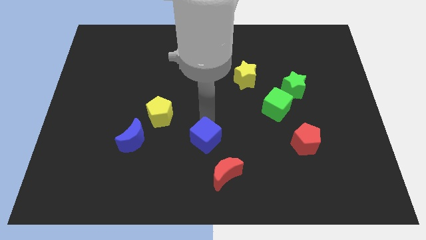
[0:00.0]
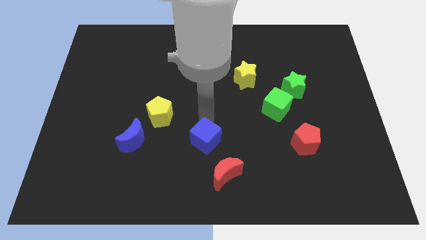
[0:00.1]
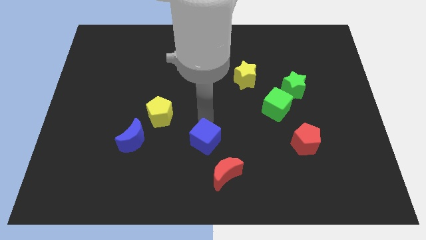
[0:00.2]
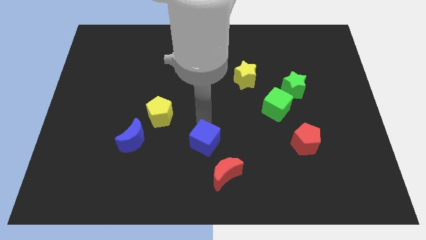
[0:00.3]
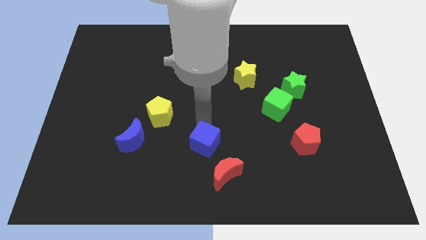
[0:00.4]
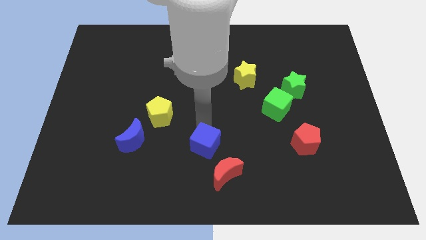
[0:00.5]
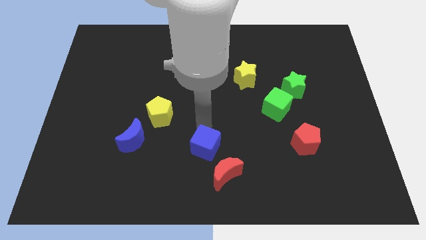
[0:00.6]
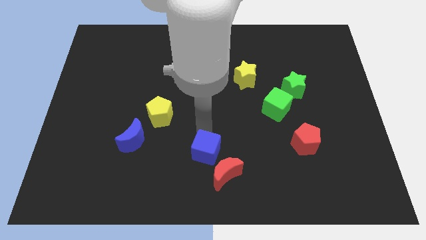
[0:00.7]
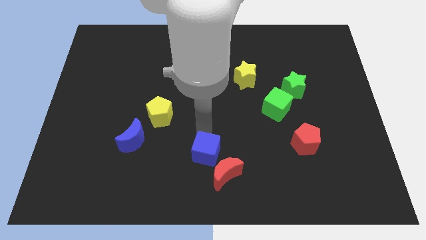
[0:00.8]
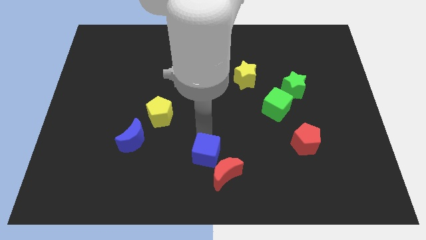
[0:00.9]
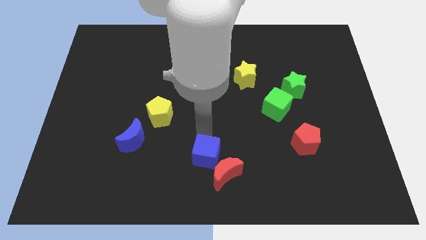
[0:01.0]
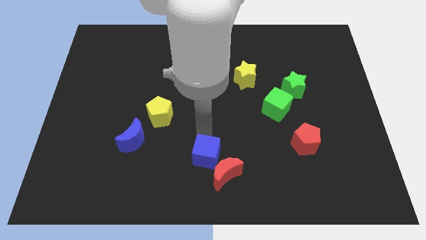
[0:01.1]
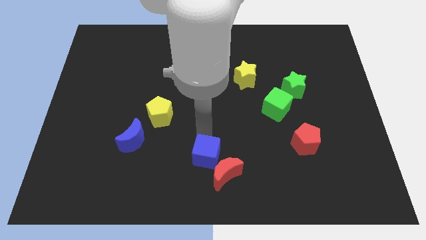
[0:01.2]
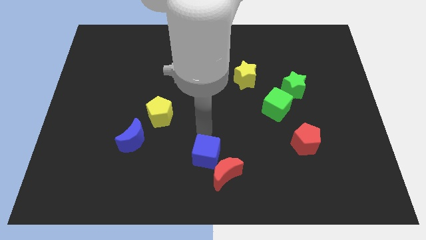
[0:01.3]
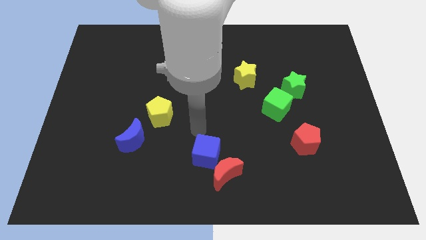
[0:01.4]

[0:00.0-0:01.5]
move blue cube towards red moon

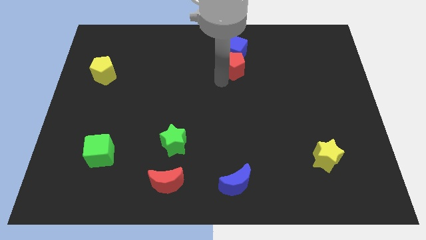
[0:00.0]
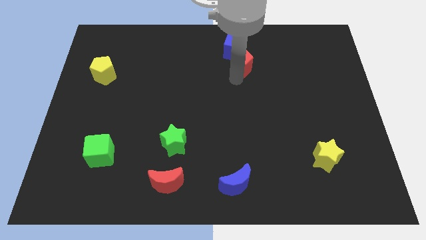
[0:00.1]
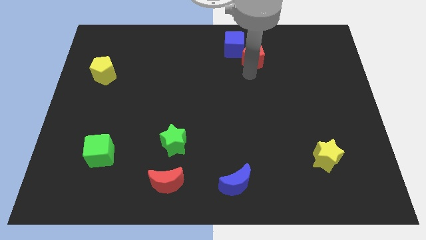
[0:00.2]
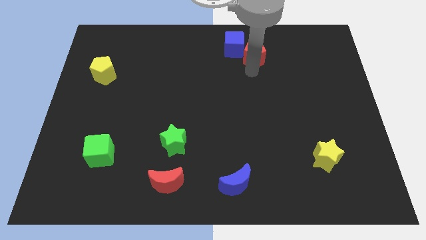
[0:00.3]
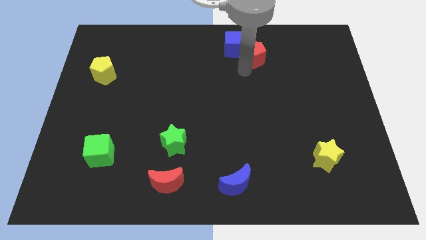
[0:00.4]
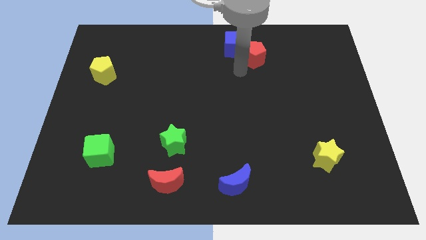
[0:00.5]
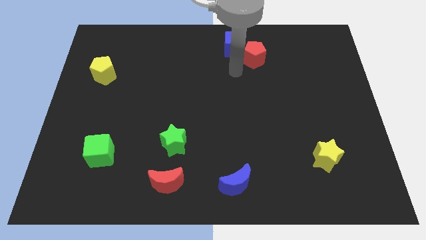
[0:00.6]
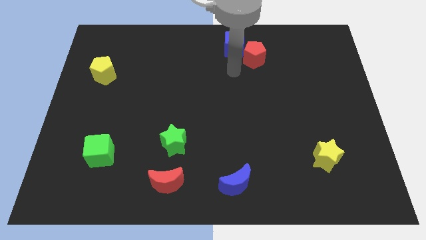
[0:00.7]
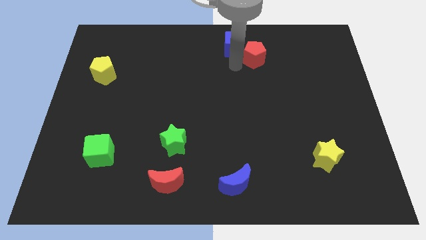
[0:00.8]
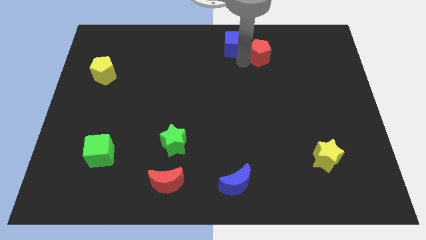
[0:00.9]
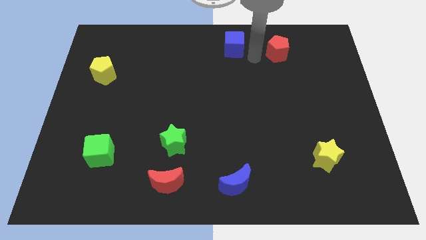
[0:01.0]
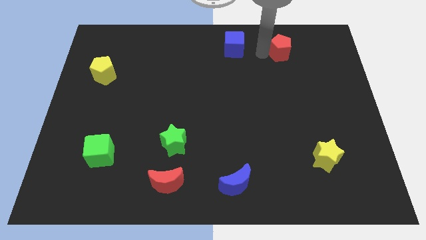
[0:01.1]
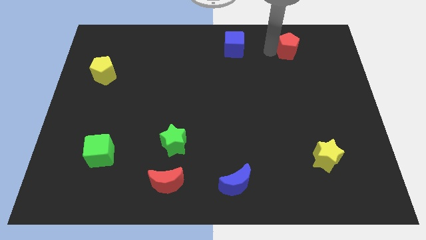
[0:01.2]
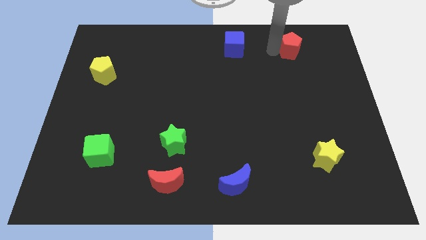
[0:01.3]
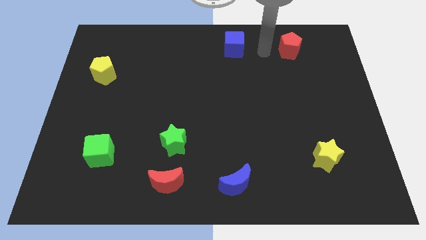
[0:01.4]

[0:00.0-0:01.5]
push the red pentagon to the right of the blue cube

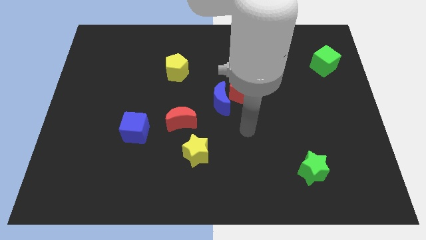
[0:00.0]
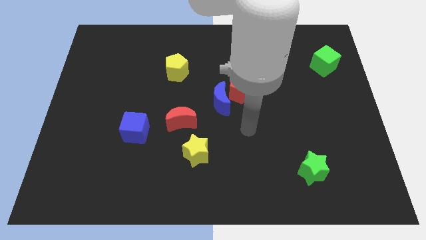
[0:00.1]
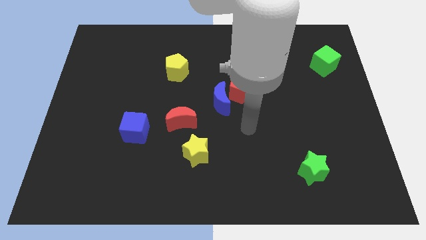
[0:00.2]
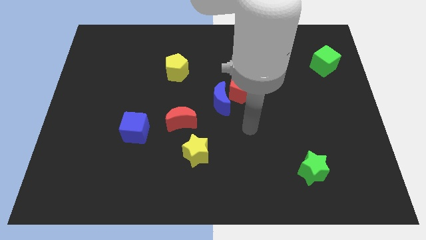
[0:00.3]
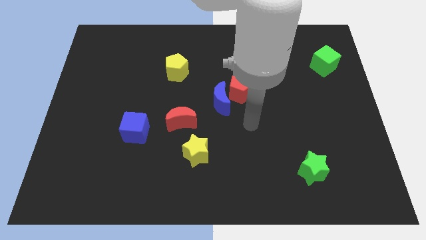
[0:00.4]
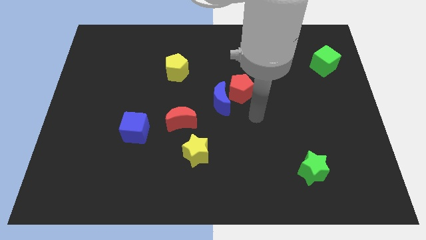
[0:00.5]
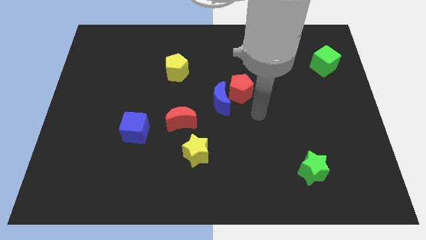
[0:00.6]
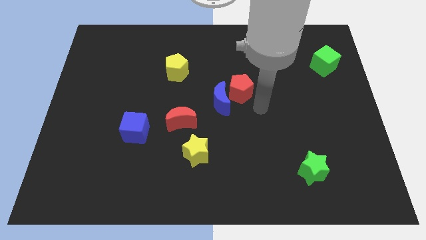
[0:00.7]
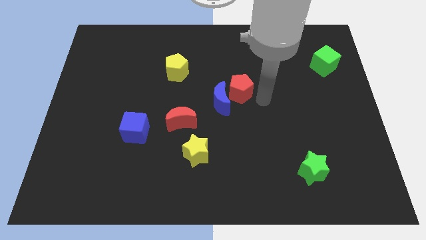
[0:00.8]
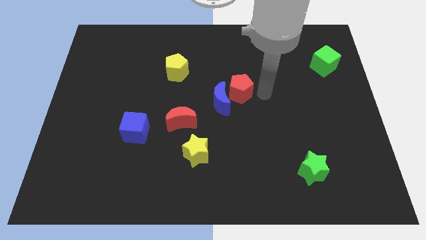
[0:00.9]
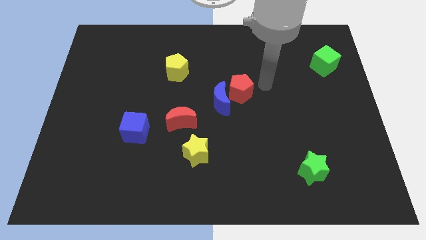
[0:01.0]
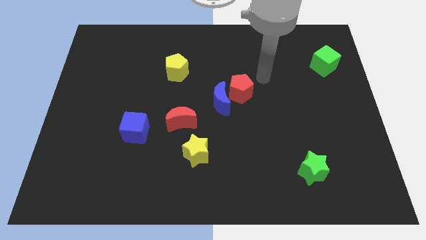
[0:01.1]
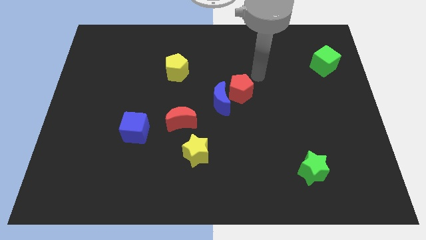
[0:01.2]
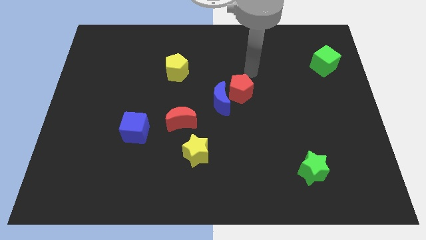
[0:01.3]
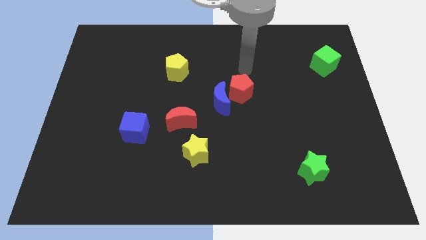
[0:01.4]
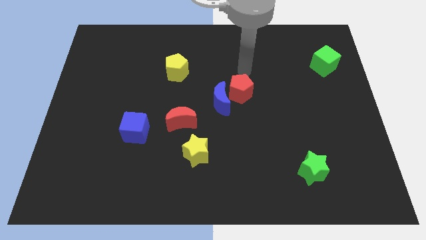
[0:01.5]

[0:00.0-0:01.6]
move your arm on top of the red pentagon

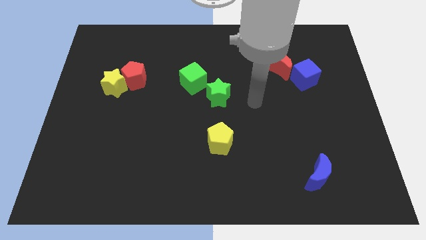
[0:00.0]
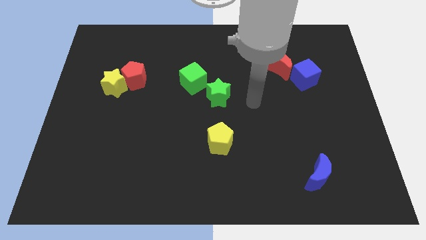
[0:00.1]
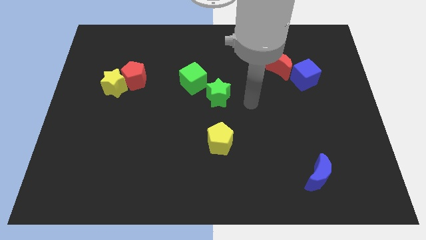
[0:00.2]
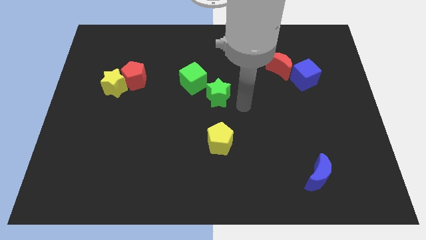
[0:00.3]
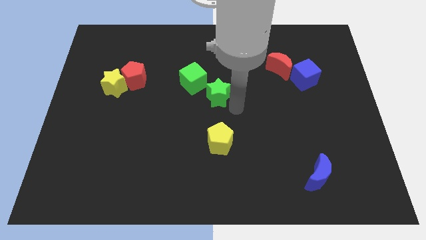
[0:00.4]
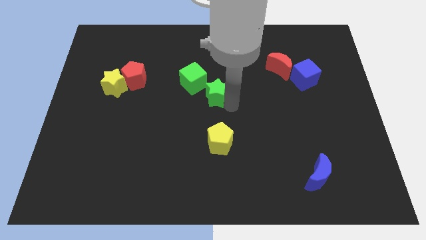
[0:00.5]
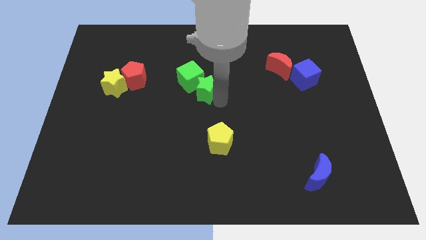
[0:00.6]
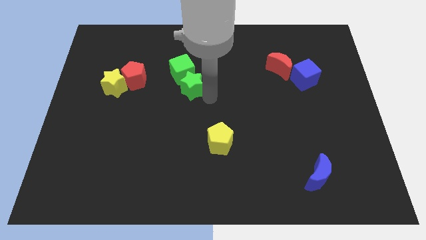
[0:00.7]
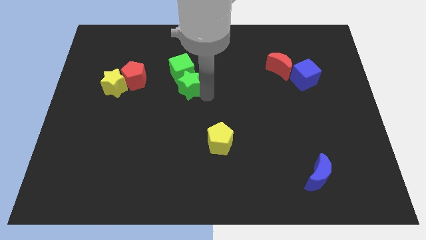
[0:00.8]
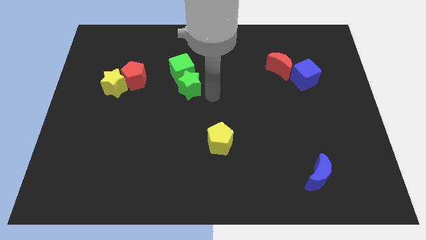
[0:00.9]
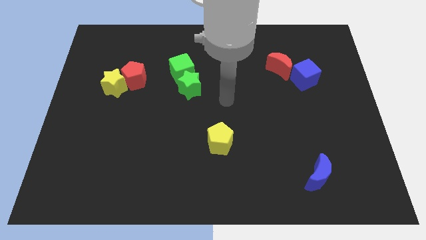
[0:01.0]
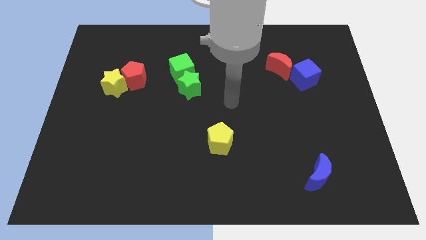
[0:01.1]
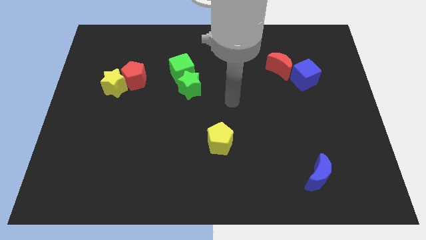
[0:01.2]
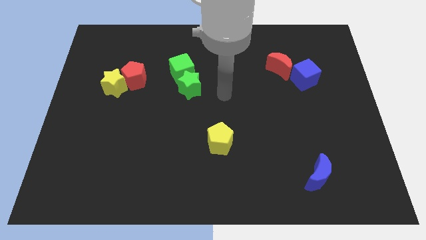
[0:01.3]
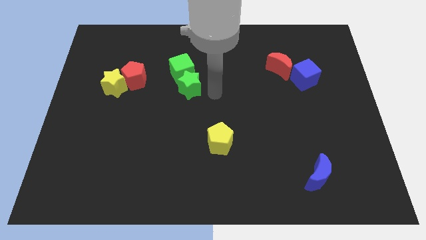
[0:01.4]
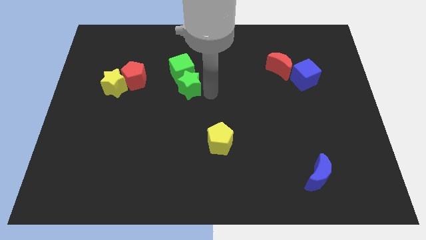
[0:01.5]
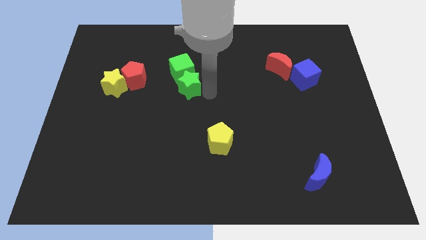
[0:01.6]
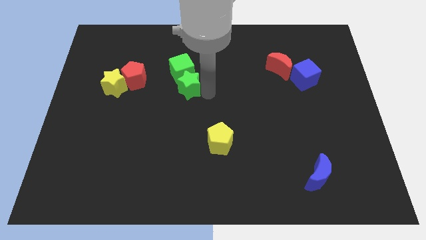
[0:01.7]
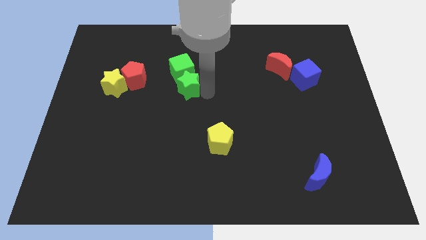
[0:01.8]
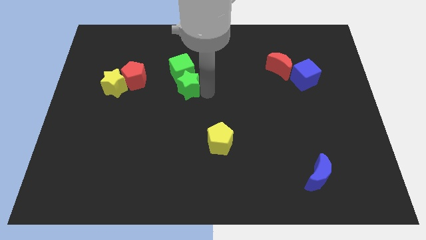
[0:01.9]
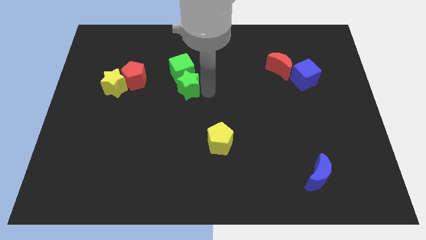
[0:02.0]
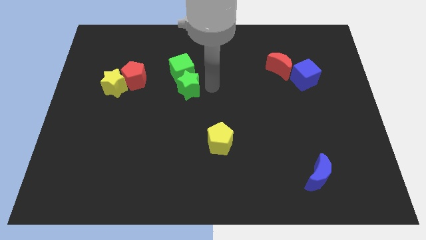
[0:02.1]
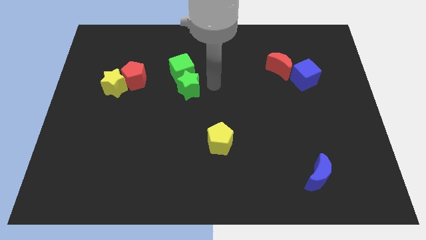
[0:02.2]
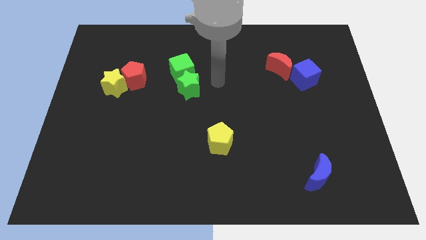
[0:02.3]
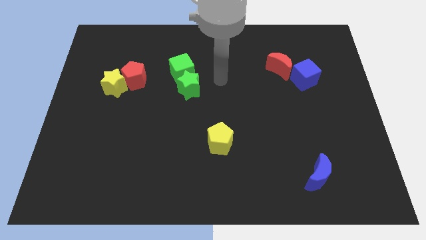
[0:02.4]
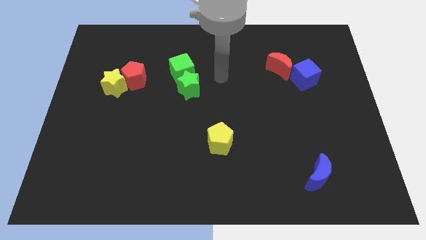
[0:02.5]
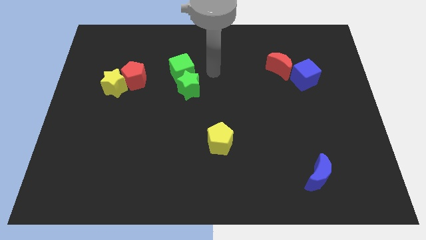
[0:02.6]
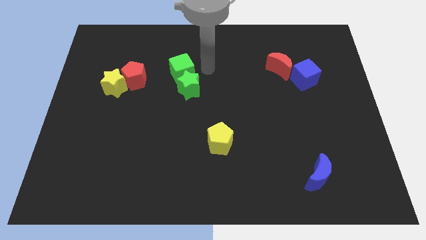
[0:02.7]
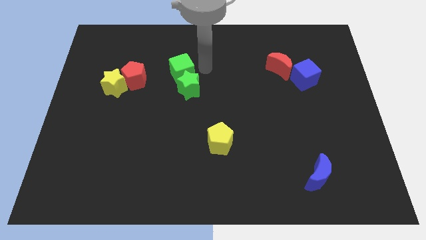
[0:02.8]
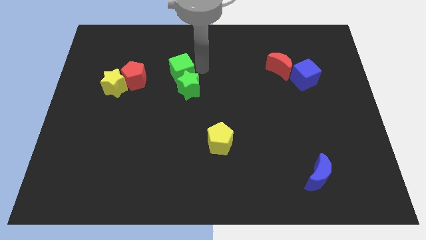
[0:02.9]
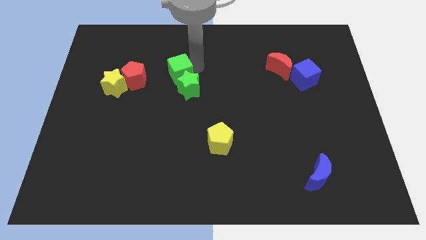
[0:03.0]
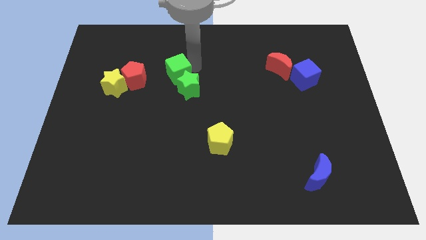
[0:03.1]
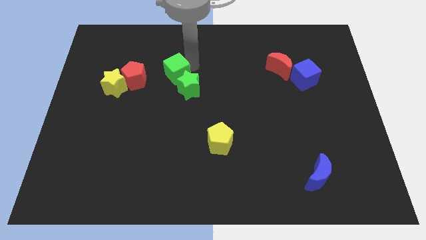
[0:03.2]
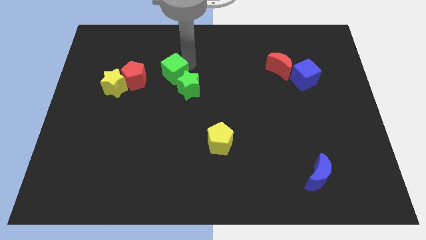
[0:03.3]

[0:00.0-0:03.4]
push the green star into the green cube

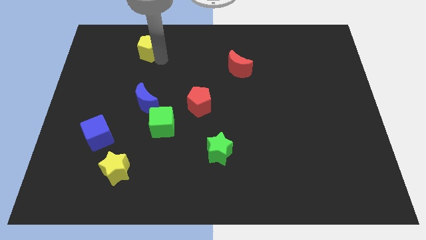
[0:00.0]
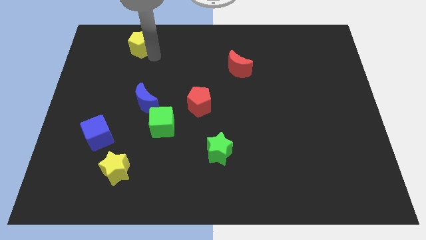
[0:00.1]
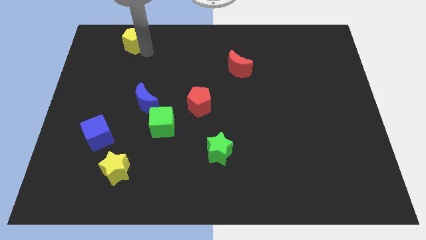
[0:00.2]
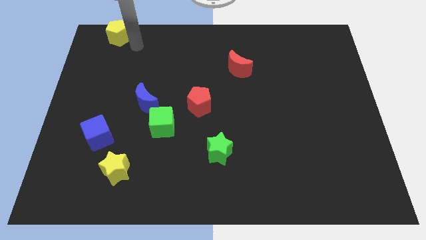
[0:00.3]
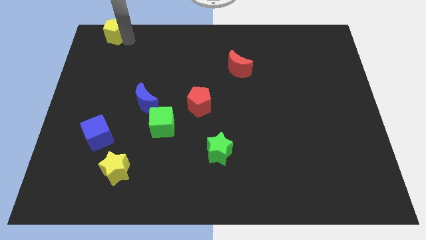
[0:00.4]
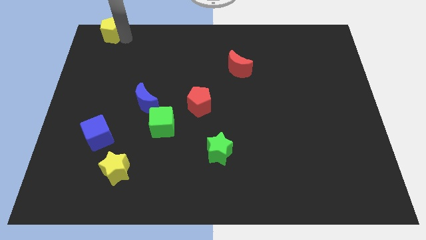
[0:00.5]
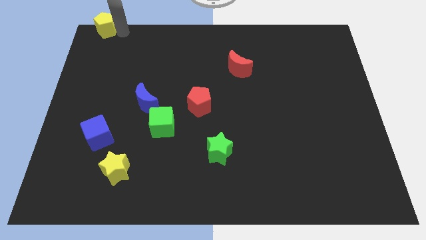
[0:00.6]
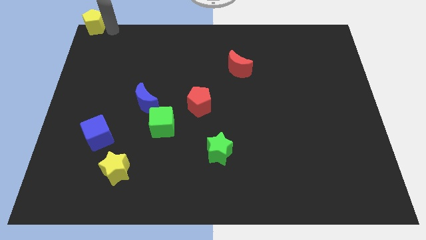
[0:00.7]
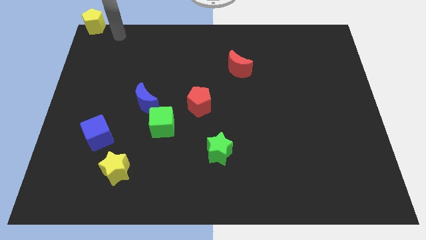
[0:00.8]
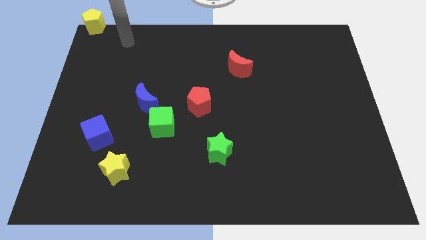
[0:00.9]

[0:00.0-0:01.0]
place yellow pentagon towards top left corner
